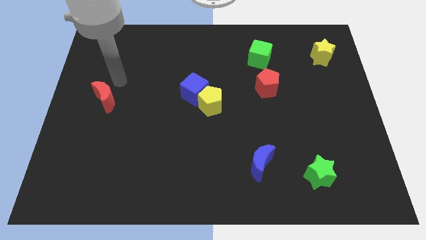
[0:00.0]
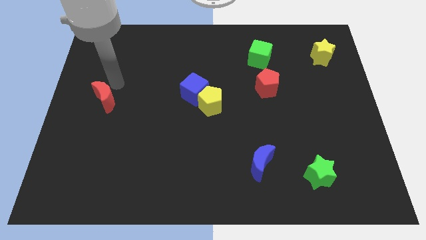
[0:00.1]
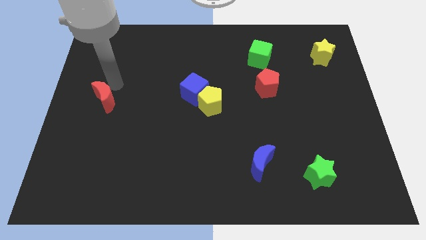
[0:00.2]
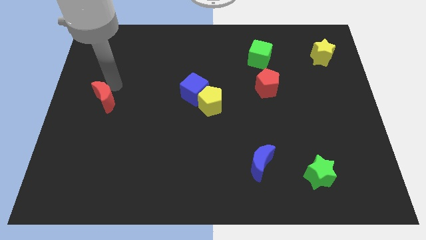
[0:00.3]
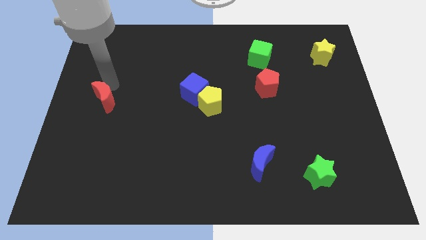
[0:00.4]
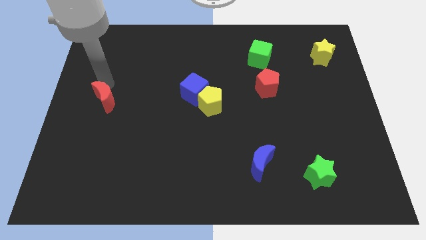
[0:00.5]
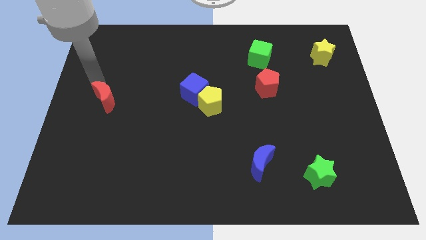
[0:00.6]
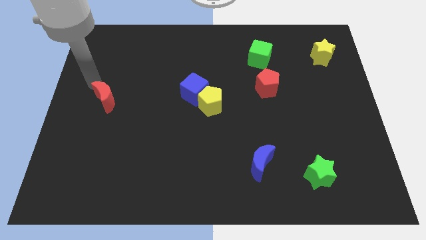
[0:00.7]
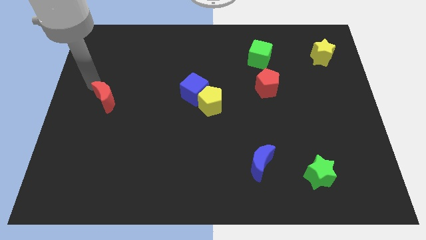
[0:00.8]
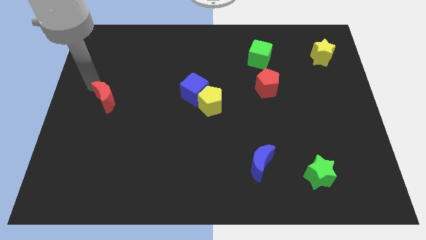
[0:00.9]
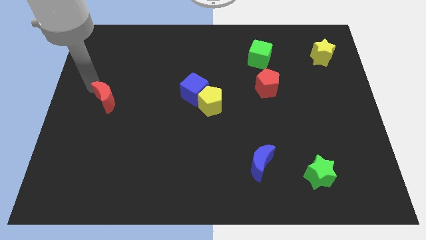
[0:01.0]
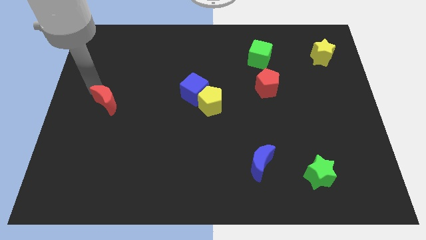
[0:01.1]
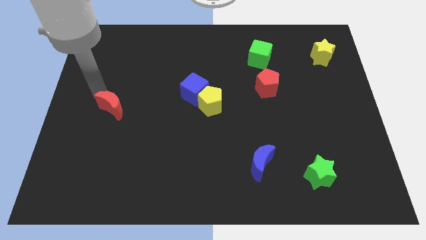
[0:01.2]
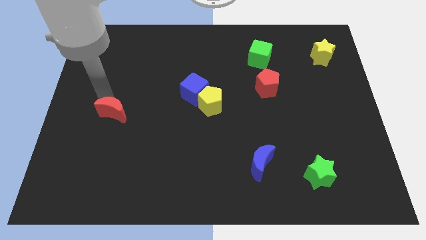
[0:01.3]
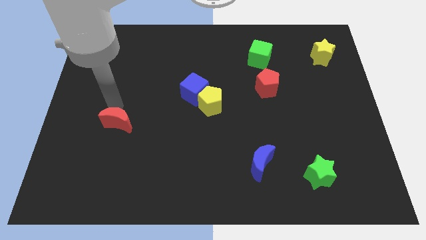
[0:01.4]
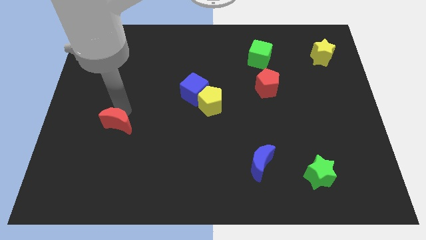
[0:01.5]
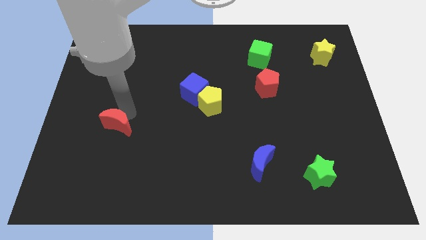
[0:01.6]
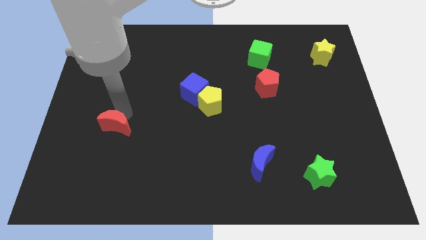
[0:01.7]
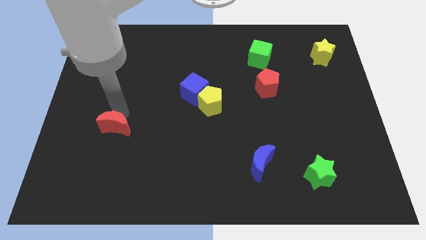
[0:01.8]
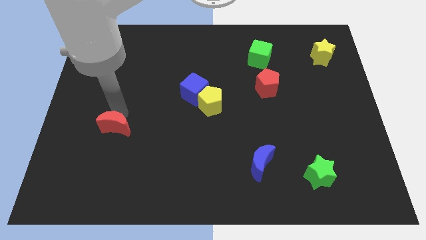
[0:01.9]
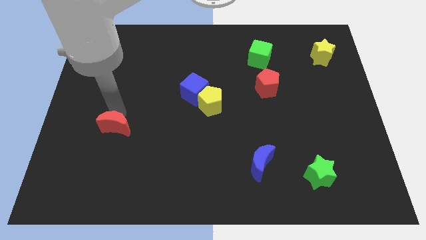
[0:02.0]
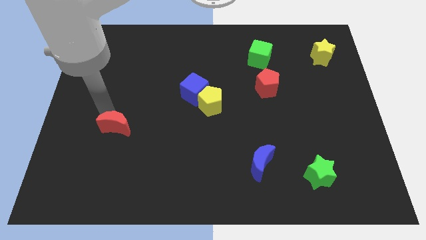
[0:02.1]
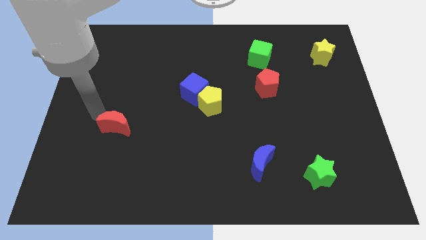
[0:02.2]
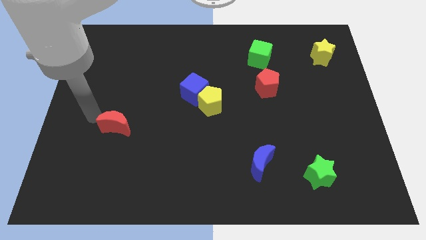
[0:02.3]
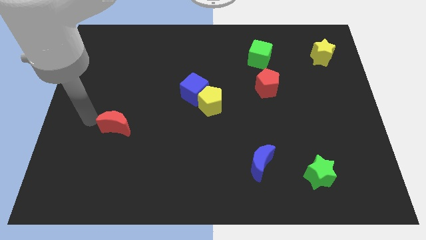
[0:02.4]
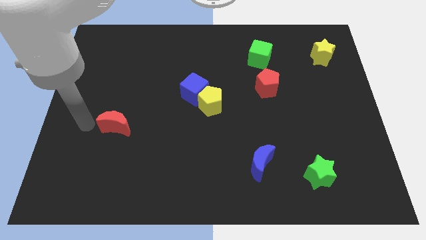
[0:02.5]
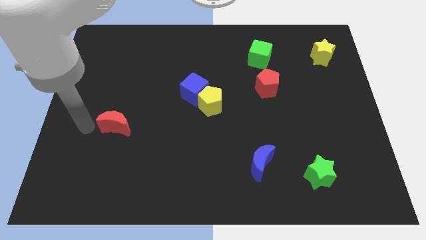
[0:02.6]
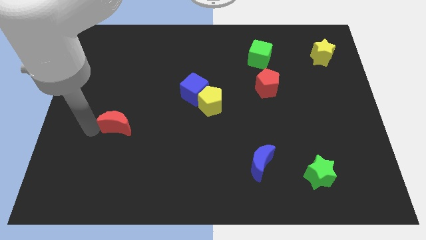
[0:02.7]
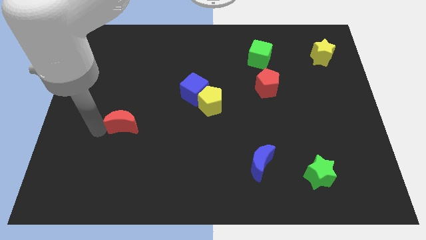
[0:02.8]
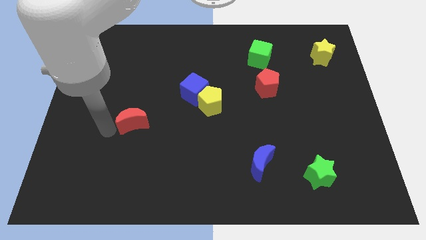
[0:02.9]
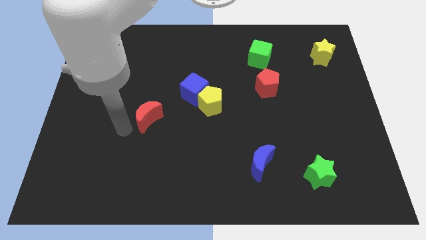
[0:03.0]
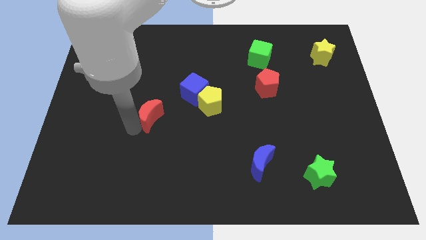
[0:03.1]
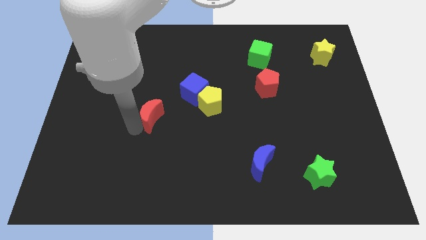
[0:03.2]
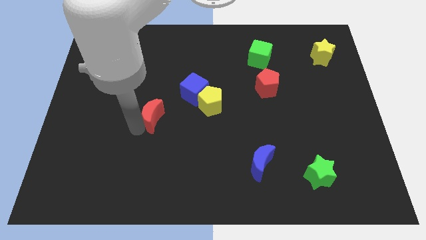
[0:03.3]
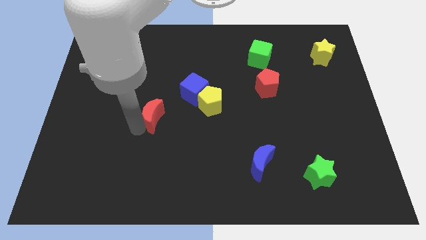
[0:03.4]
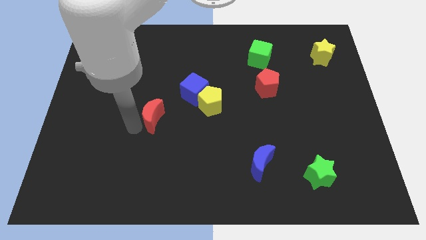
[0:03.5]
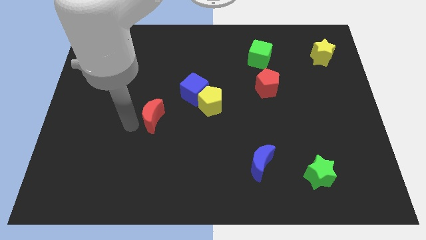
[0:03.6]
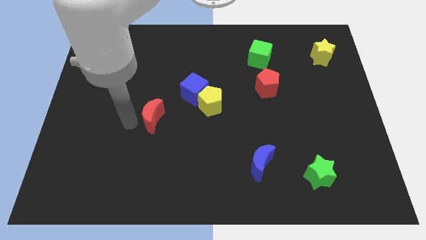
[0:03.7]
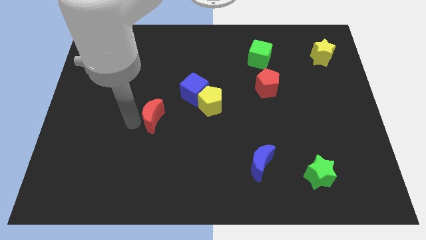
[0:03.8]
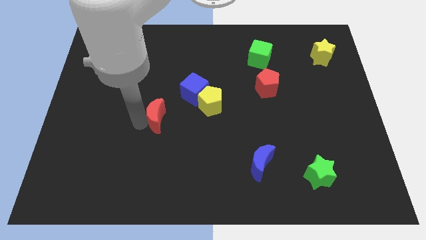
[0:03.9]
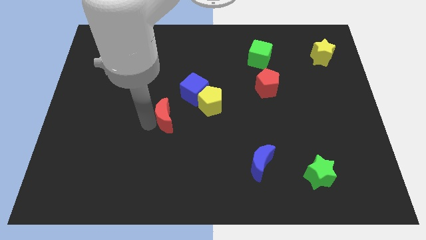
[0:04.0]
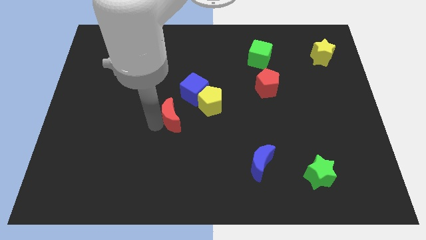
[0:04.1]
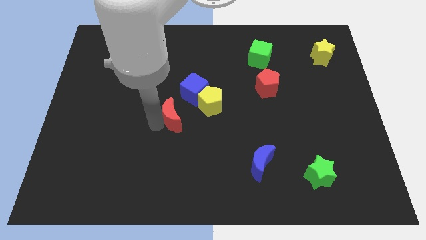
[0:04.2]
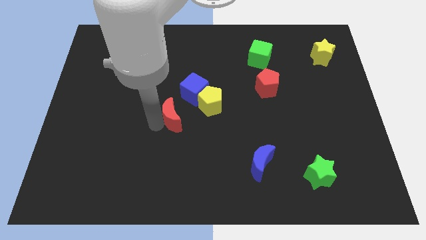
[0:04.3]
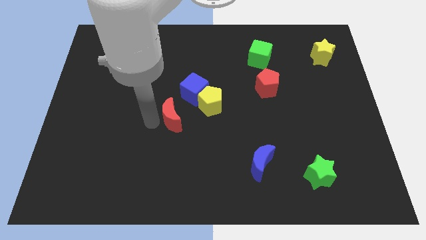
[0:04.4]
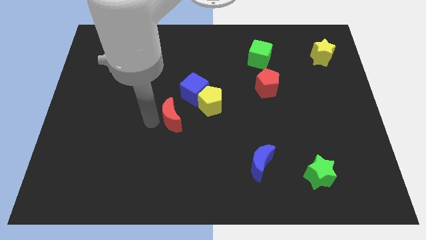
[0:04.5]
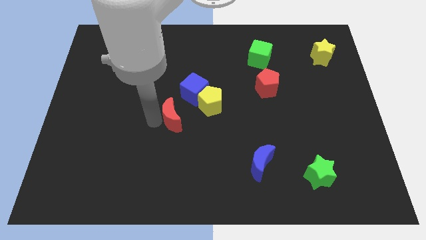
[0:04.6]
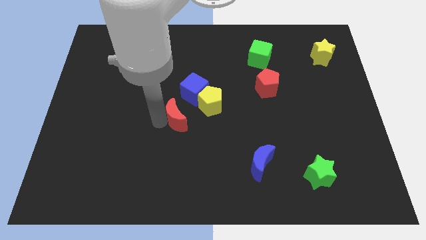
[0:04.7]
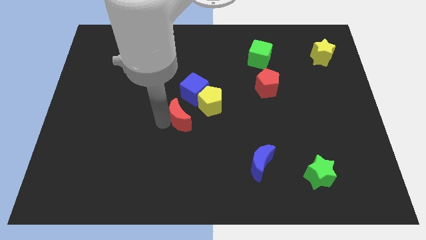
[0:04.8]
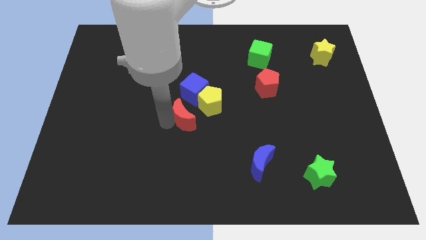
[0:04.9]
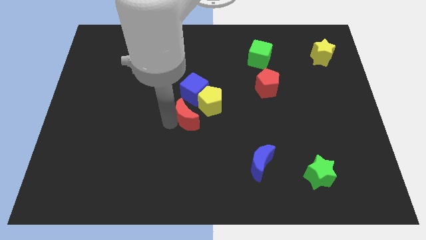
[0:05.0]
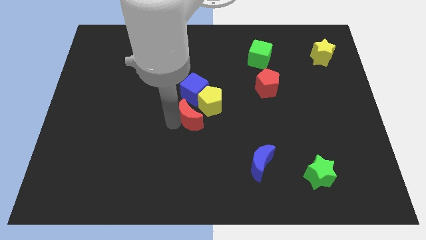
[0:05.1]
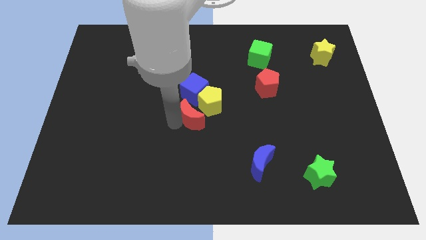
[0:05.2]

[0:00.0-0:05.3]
move the red crescent slightly close to the yellow pentagon

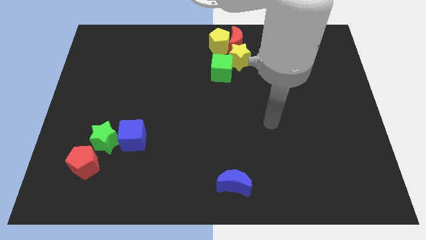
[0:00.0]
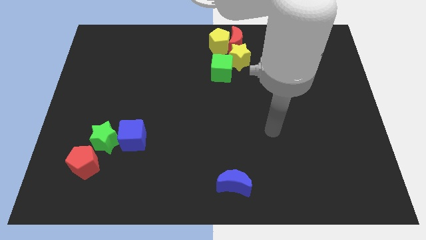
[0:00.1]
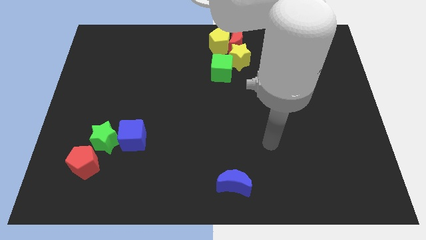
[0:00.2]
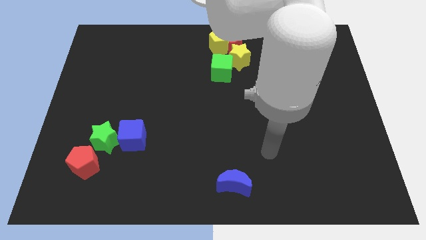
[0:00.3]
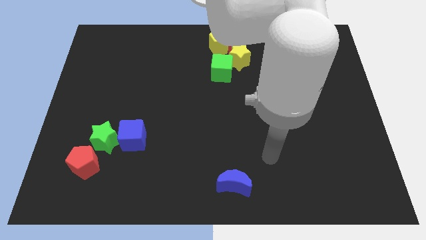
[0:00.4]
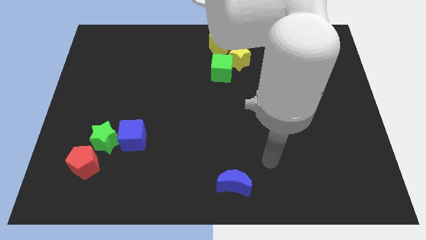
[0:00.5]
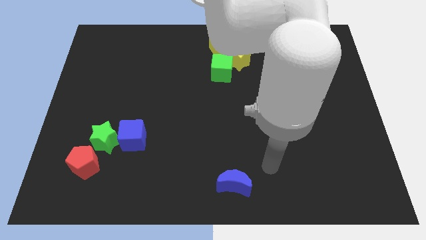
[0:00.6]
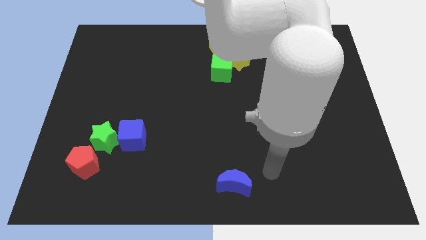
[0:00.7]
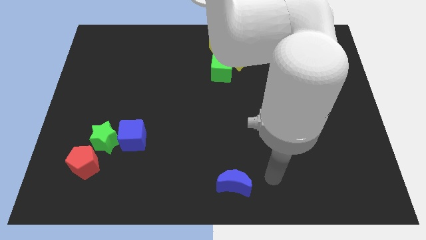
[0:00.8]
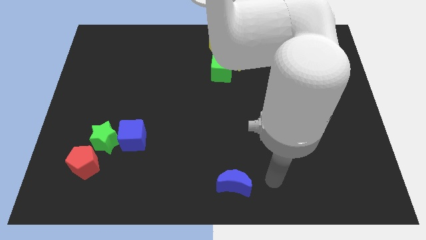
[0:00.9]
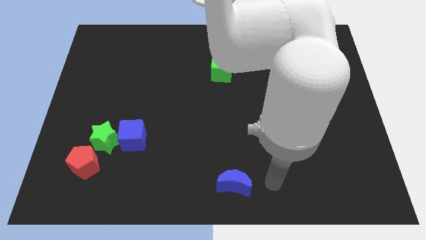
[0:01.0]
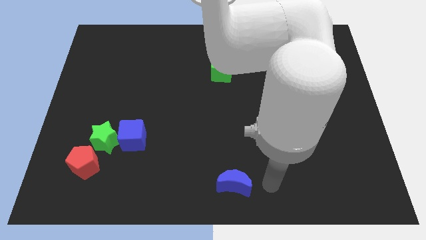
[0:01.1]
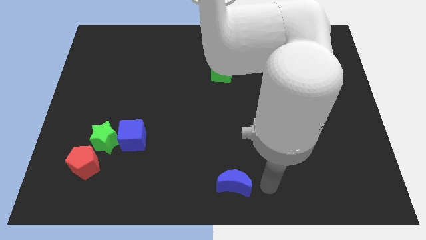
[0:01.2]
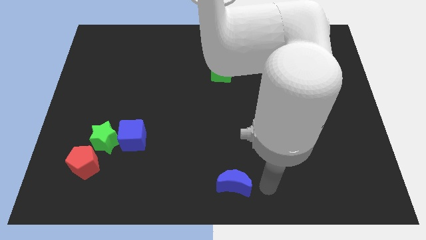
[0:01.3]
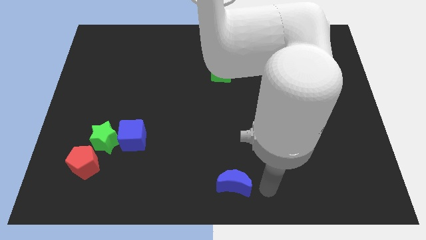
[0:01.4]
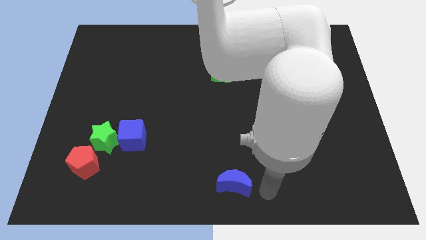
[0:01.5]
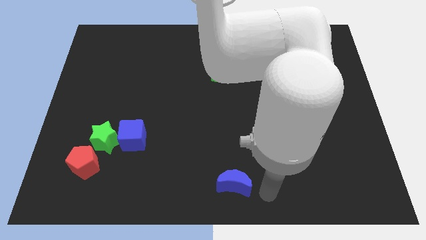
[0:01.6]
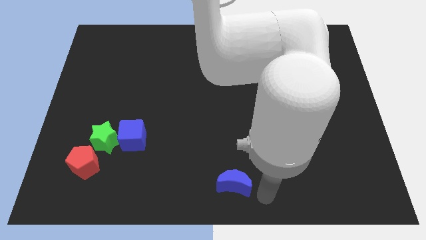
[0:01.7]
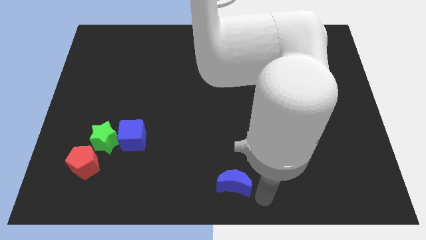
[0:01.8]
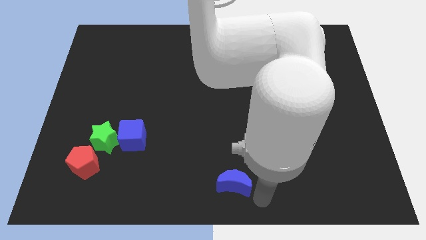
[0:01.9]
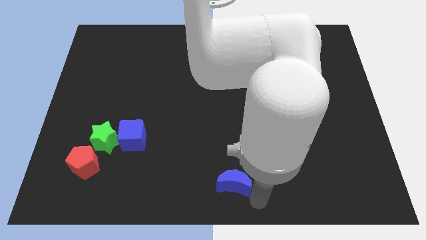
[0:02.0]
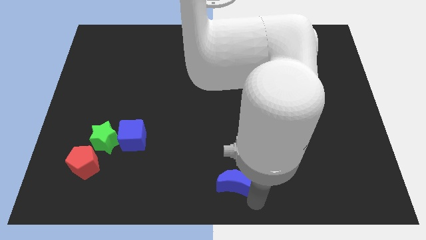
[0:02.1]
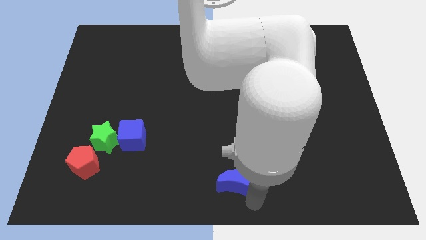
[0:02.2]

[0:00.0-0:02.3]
go near the blue moon

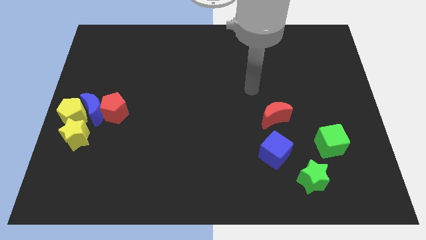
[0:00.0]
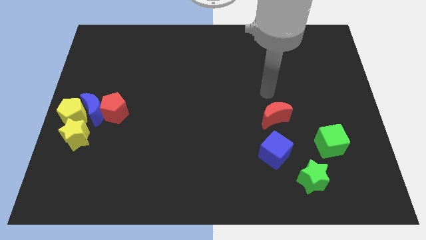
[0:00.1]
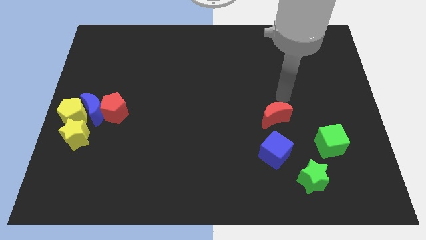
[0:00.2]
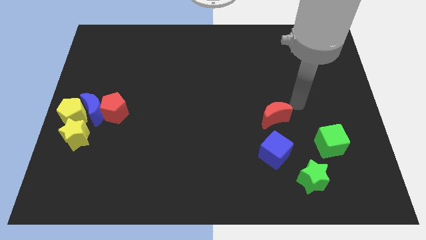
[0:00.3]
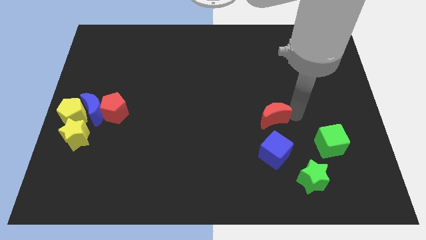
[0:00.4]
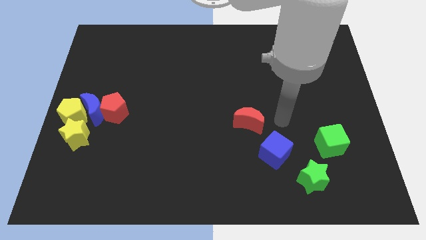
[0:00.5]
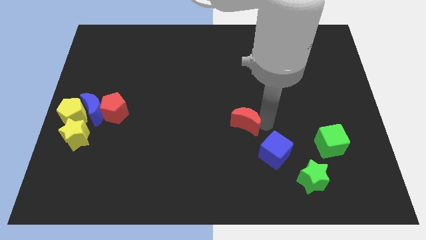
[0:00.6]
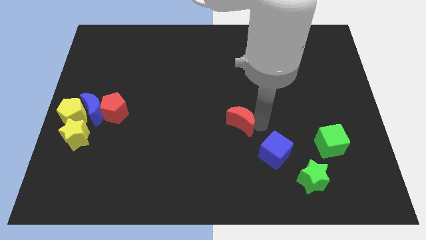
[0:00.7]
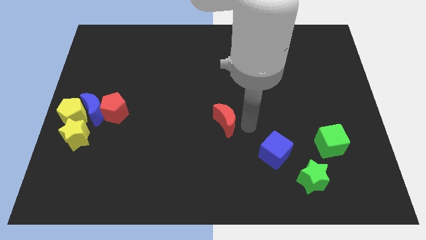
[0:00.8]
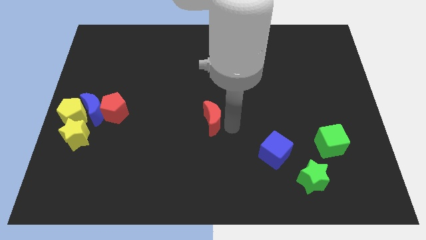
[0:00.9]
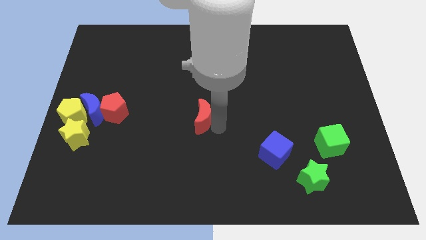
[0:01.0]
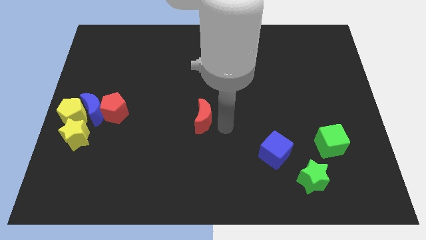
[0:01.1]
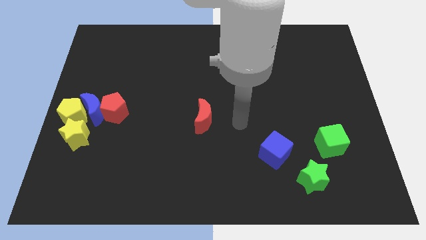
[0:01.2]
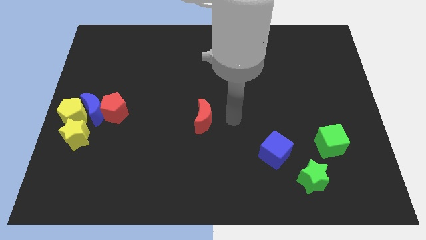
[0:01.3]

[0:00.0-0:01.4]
push the red crescent towards the center left side of the board
